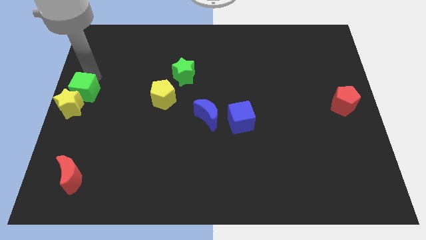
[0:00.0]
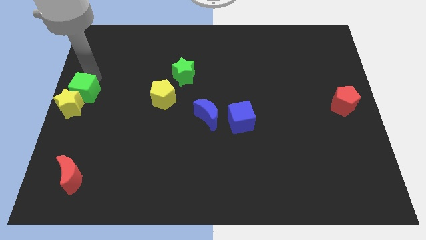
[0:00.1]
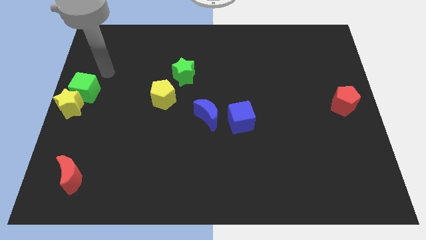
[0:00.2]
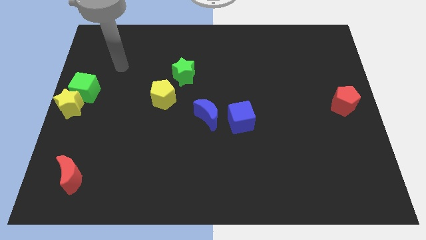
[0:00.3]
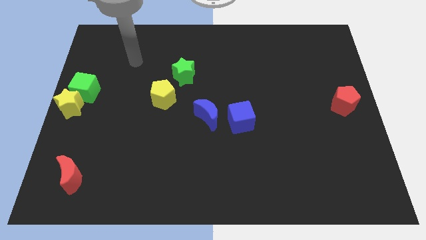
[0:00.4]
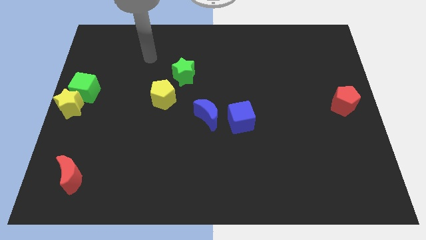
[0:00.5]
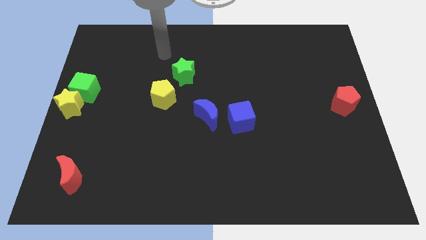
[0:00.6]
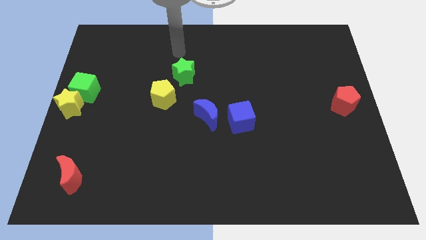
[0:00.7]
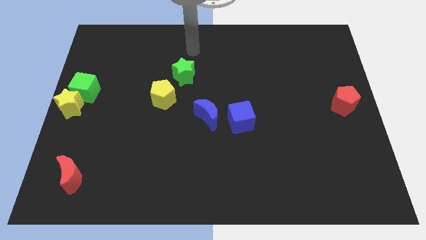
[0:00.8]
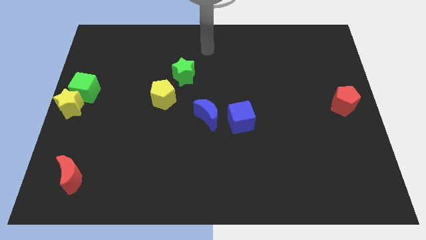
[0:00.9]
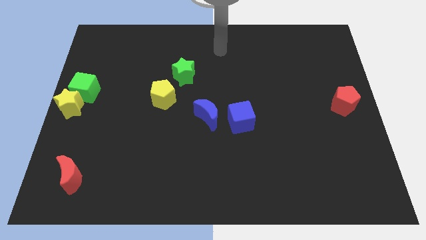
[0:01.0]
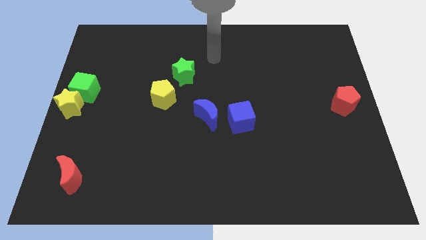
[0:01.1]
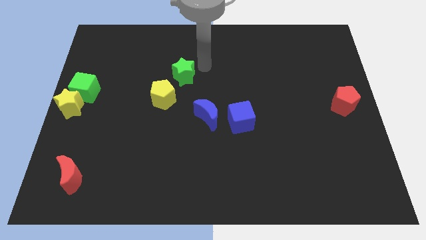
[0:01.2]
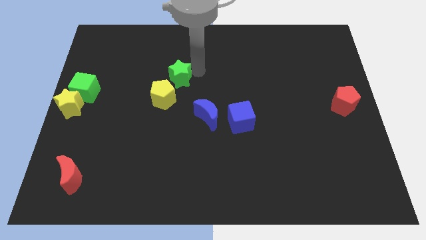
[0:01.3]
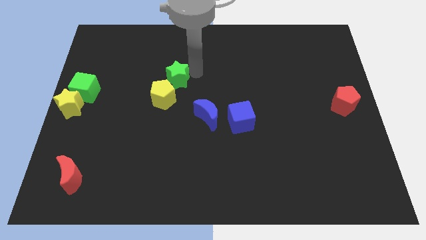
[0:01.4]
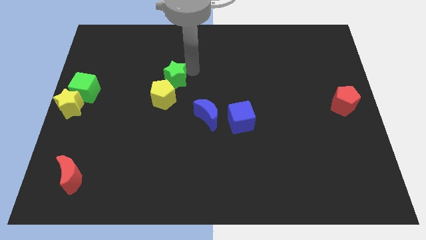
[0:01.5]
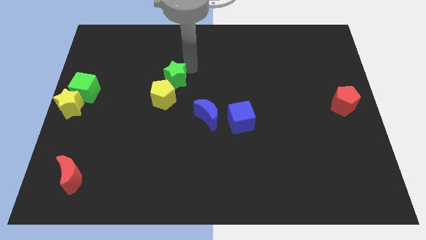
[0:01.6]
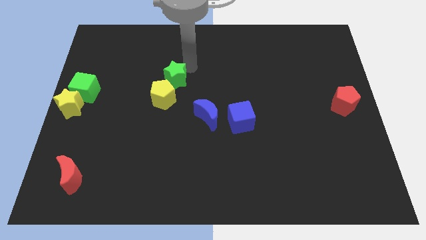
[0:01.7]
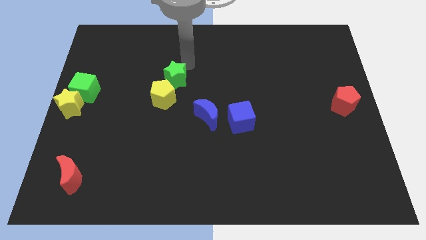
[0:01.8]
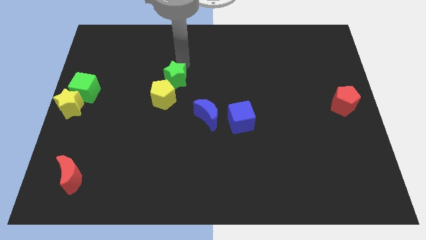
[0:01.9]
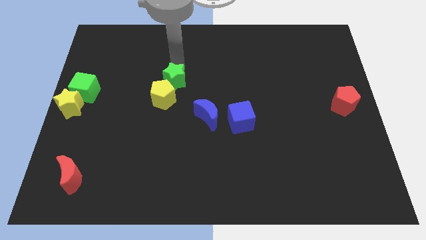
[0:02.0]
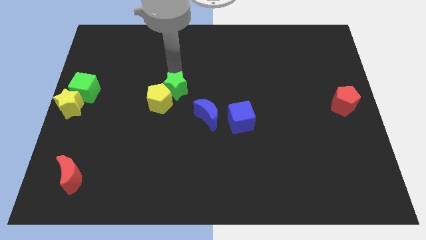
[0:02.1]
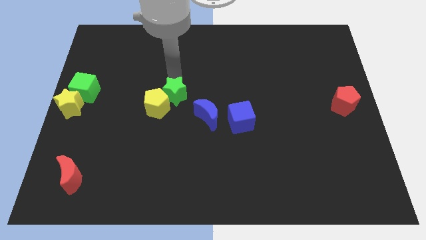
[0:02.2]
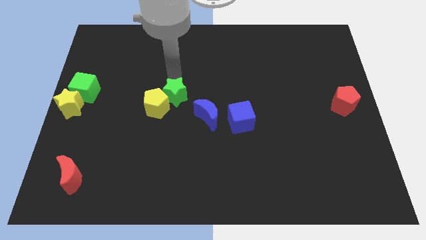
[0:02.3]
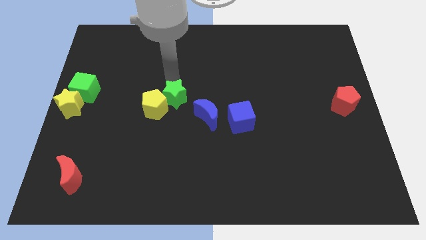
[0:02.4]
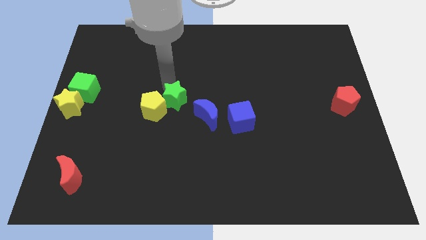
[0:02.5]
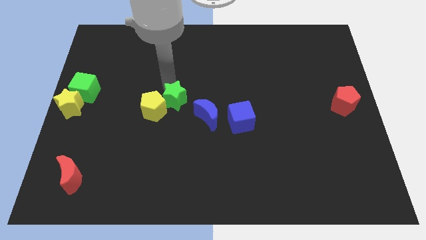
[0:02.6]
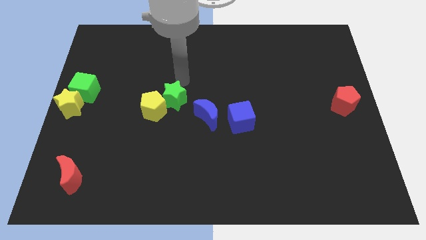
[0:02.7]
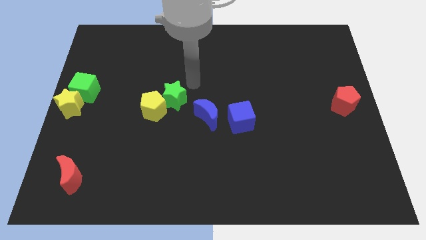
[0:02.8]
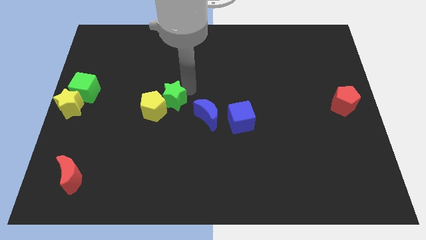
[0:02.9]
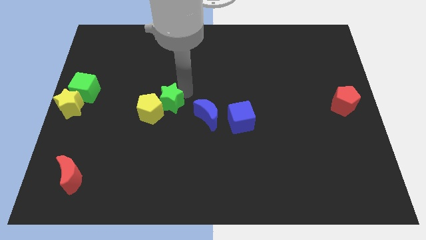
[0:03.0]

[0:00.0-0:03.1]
push the green star and yellow pentagon towards the left side of blue moon

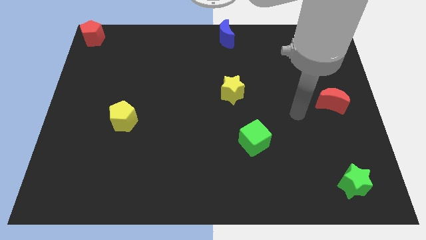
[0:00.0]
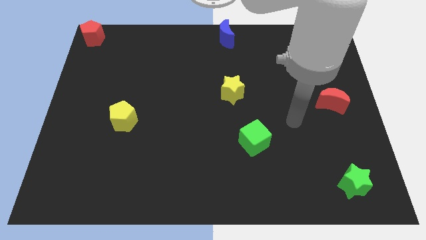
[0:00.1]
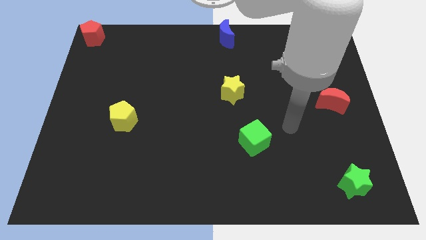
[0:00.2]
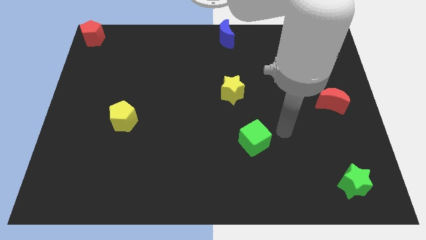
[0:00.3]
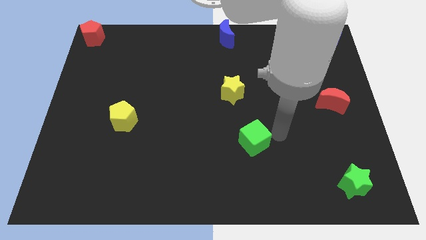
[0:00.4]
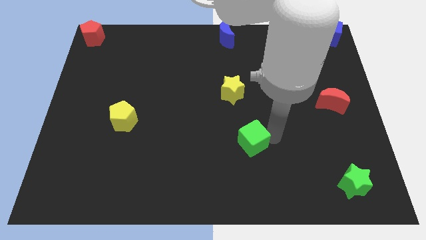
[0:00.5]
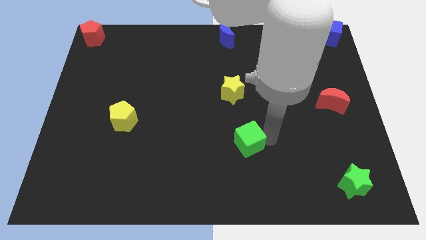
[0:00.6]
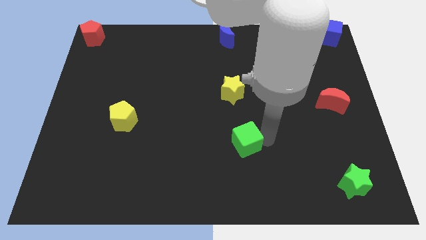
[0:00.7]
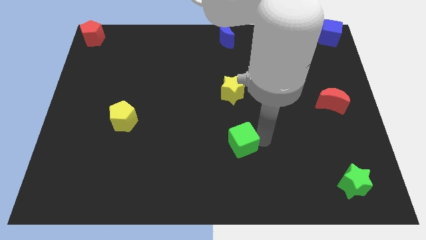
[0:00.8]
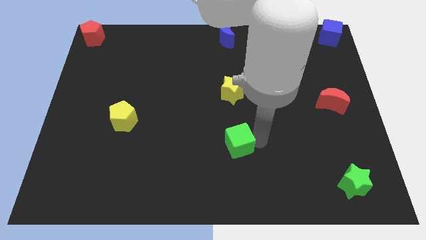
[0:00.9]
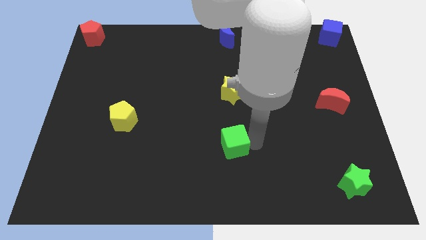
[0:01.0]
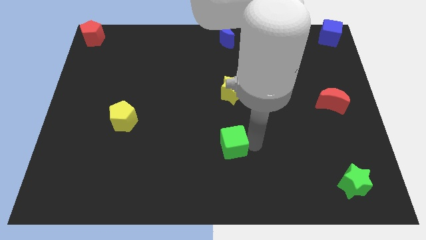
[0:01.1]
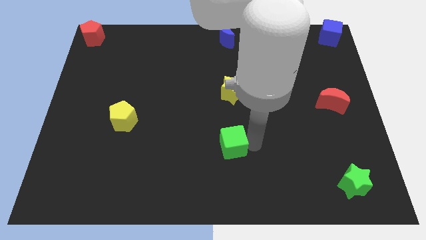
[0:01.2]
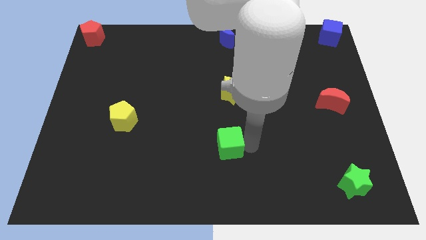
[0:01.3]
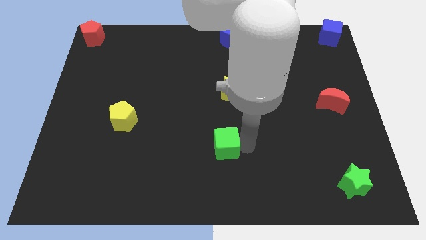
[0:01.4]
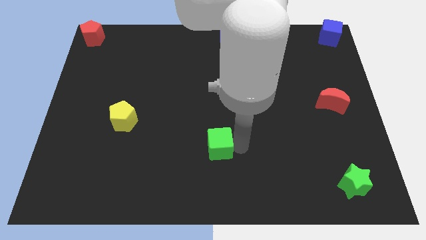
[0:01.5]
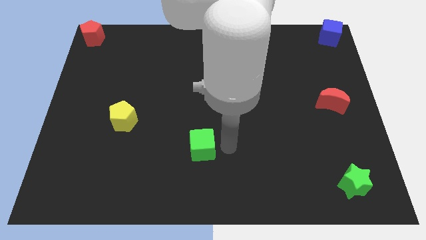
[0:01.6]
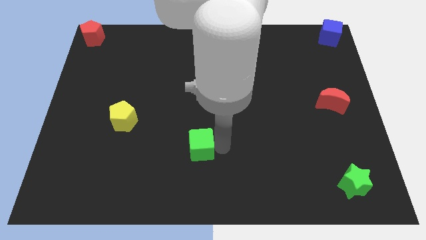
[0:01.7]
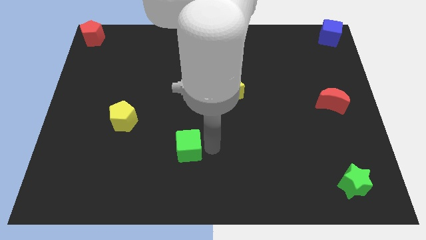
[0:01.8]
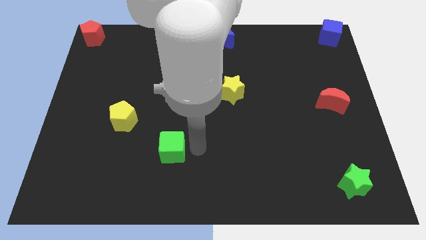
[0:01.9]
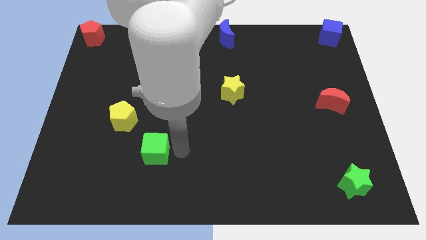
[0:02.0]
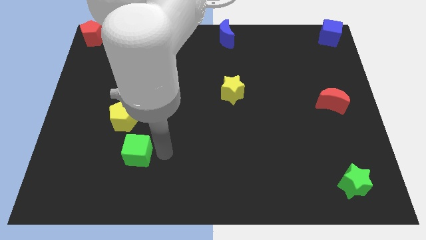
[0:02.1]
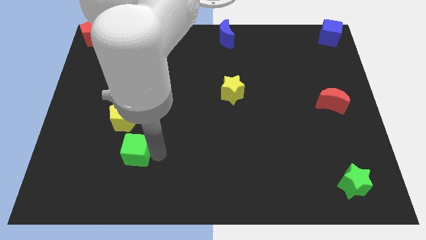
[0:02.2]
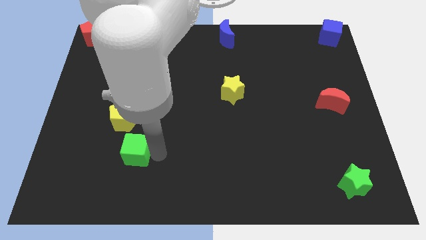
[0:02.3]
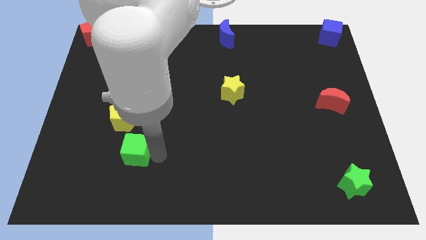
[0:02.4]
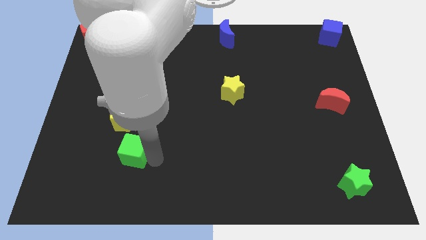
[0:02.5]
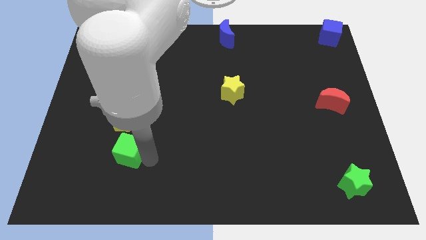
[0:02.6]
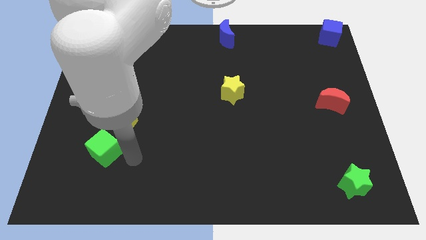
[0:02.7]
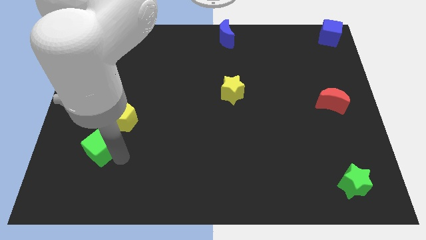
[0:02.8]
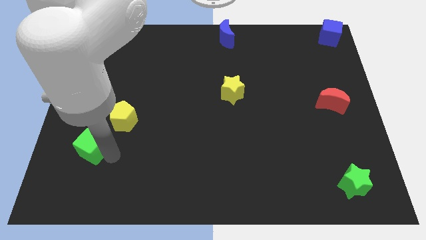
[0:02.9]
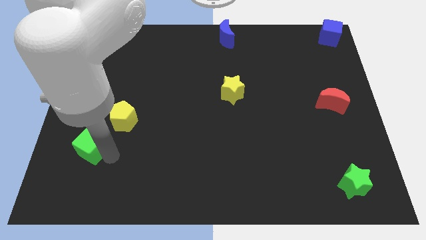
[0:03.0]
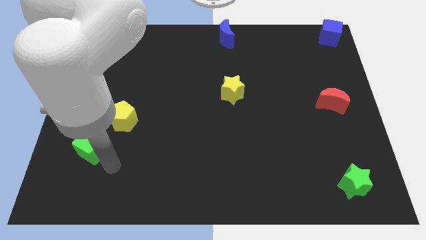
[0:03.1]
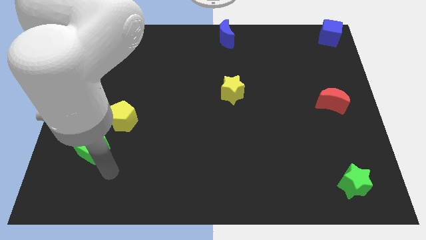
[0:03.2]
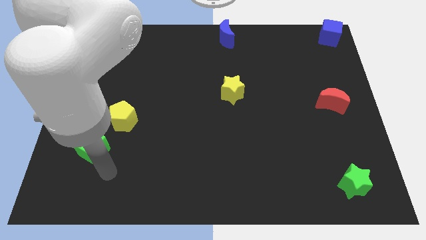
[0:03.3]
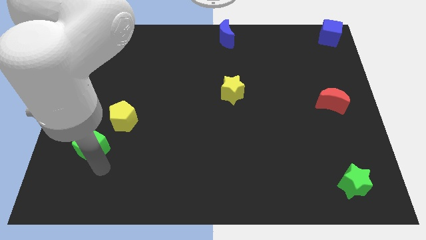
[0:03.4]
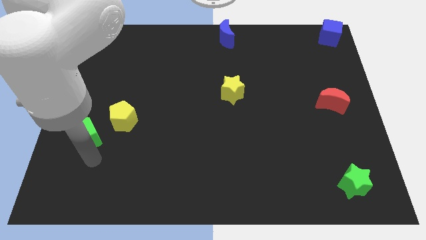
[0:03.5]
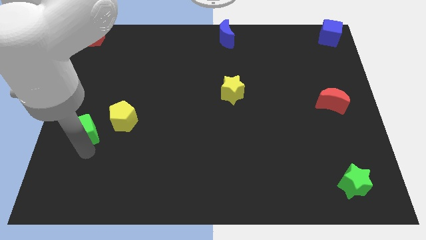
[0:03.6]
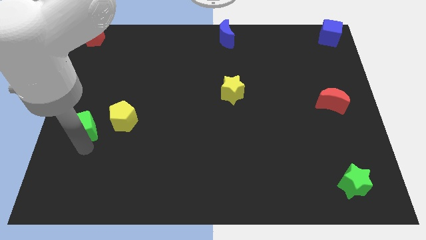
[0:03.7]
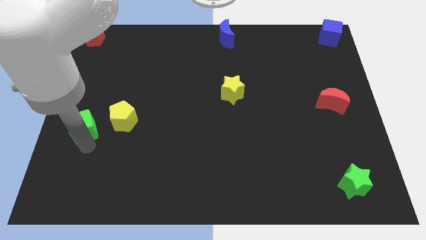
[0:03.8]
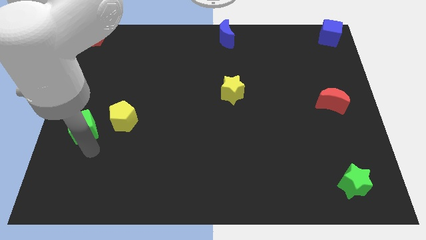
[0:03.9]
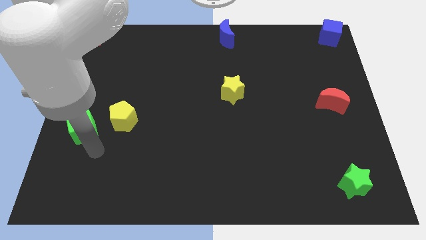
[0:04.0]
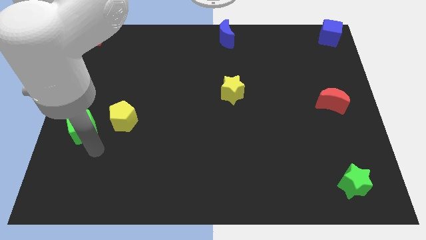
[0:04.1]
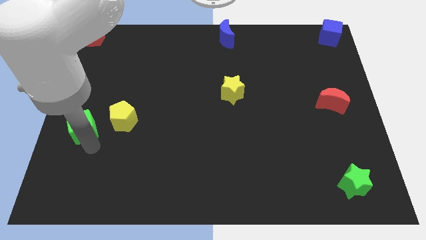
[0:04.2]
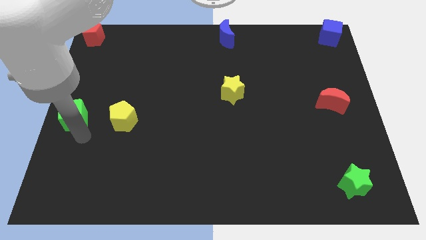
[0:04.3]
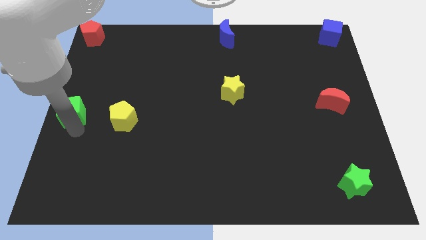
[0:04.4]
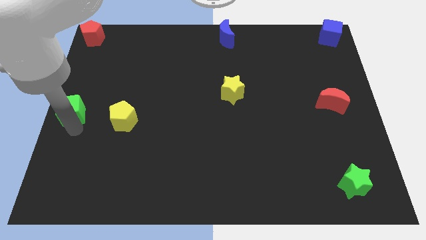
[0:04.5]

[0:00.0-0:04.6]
move the green cube towards the left center of the board

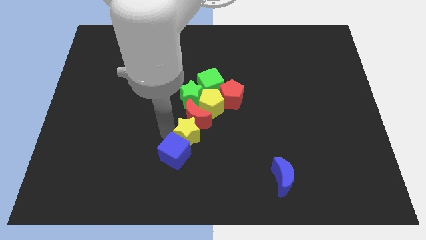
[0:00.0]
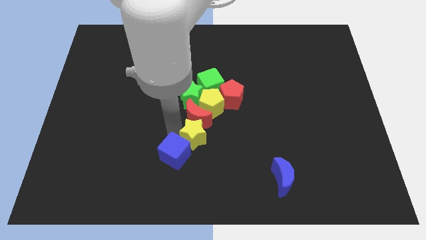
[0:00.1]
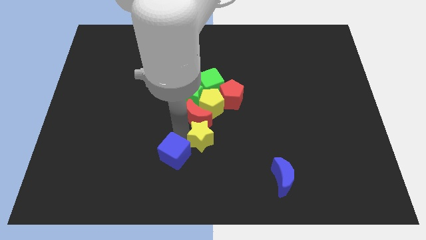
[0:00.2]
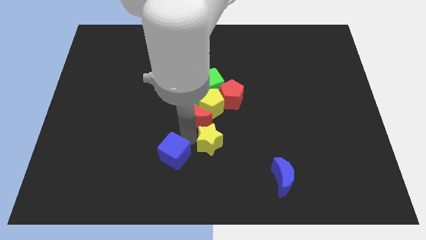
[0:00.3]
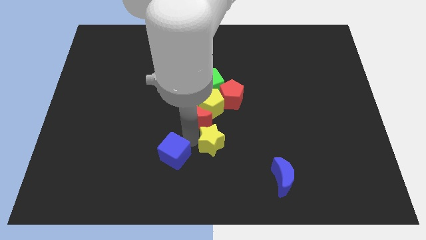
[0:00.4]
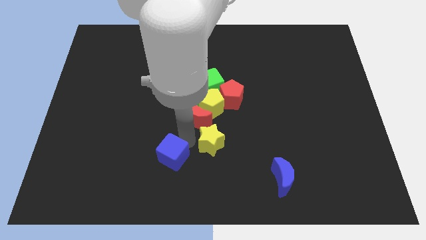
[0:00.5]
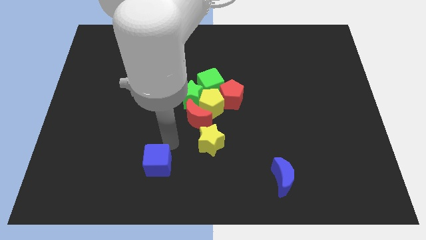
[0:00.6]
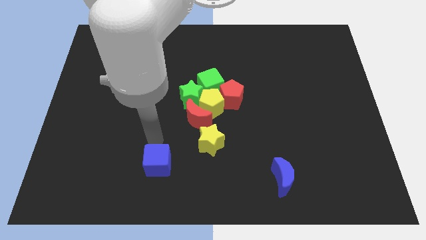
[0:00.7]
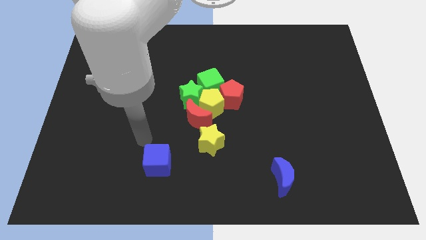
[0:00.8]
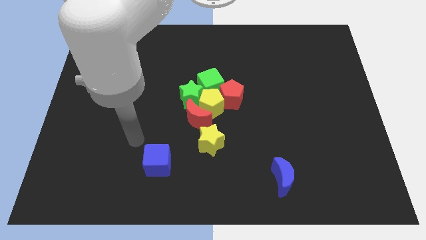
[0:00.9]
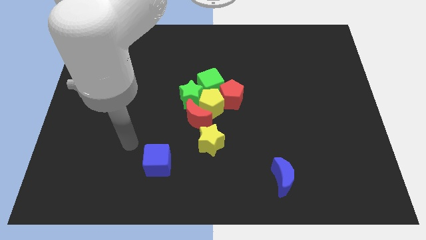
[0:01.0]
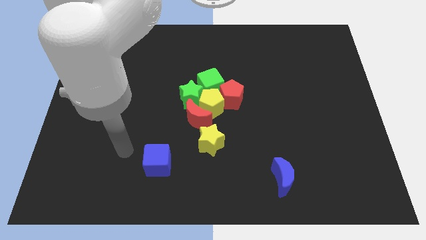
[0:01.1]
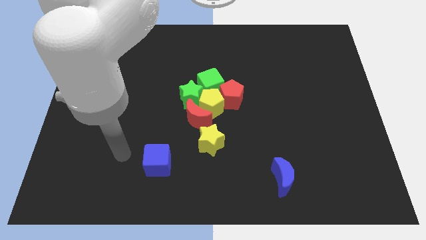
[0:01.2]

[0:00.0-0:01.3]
separate the yellow star from blue cube
